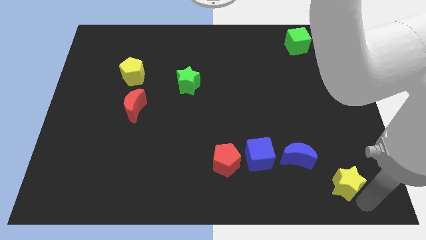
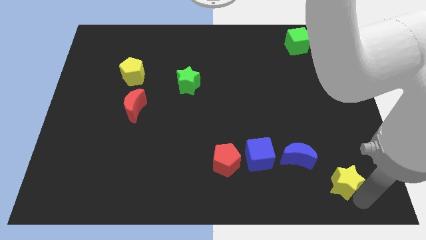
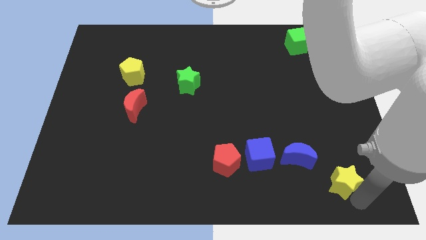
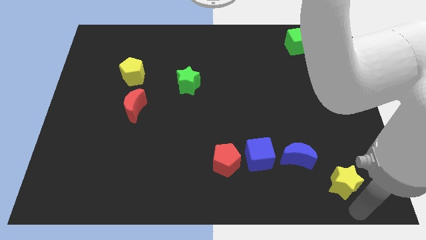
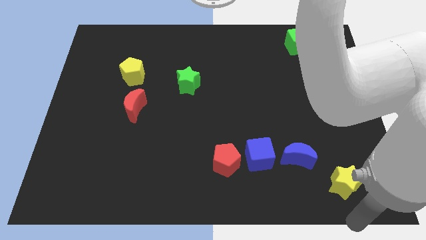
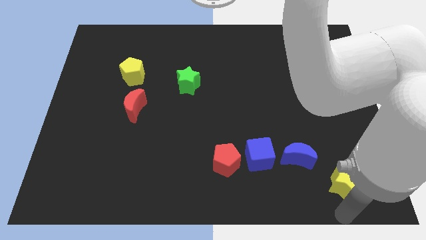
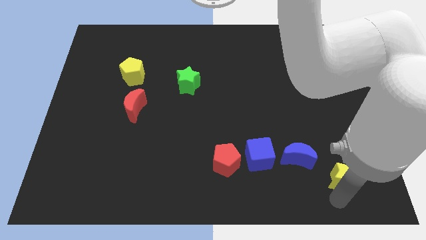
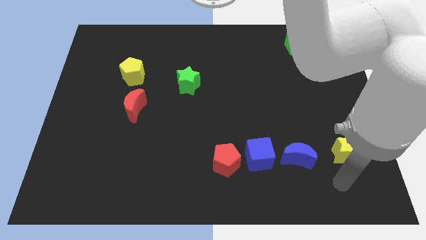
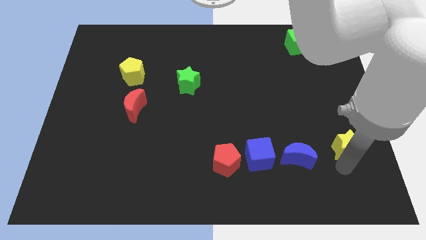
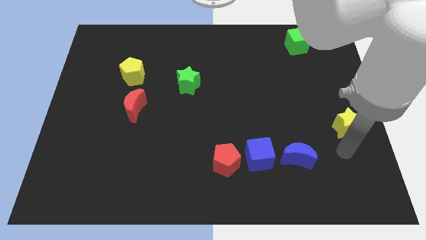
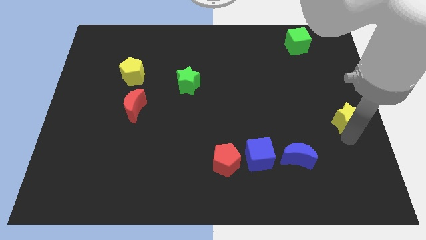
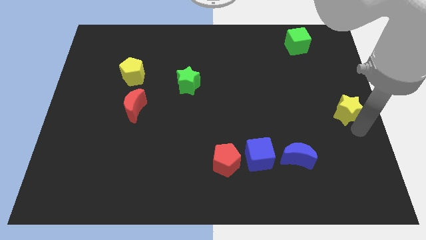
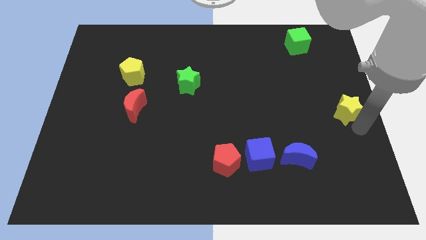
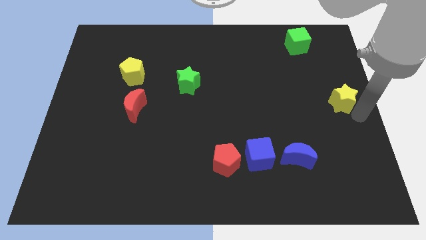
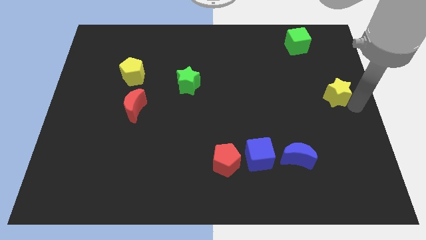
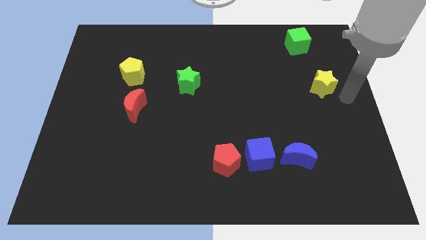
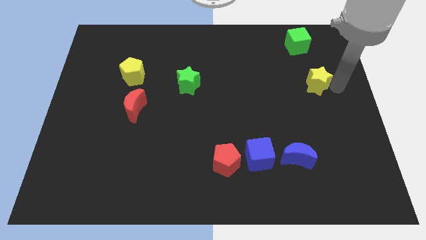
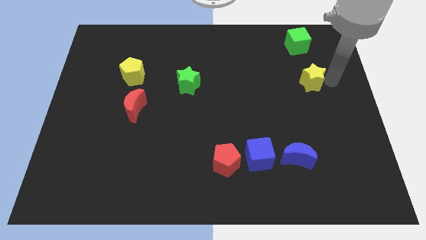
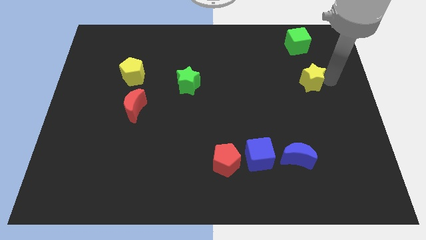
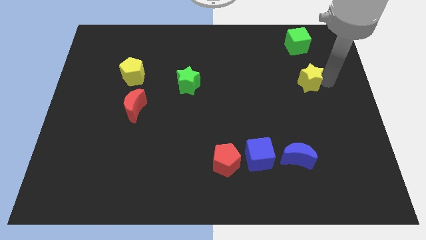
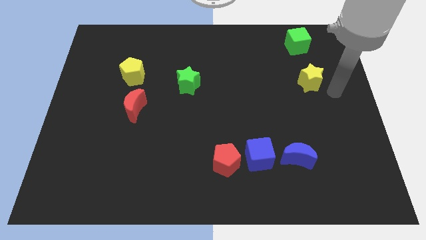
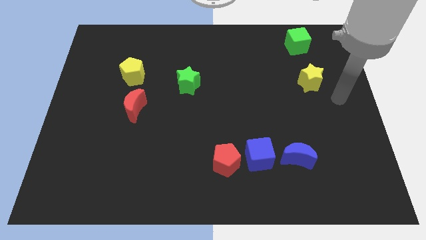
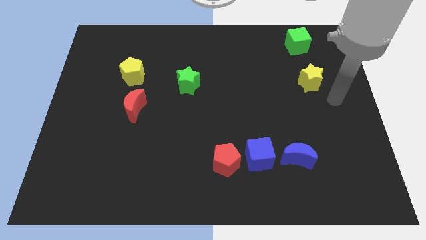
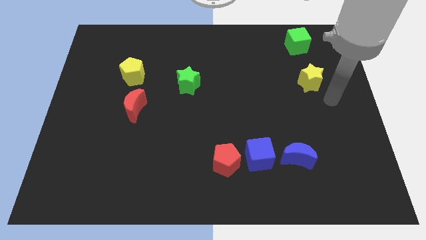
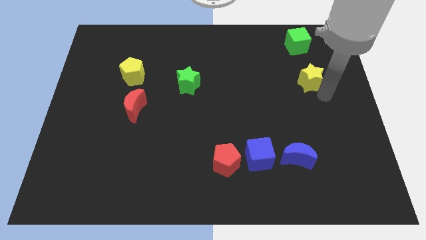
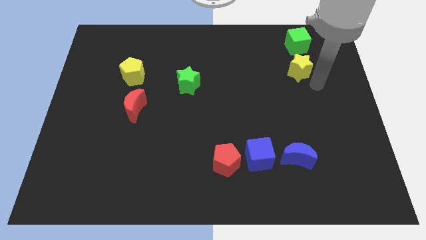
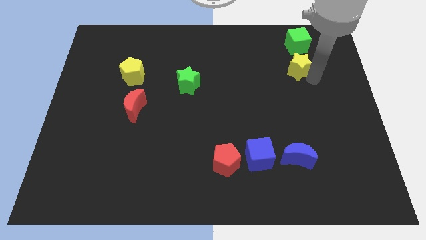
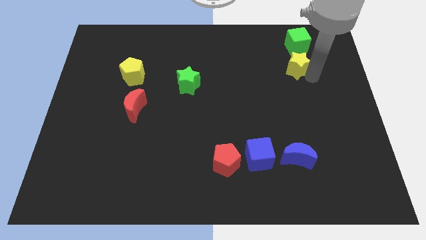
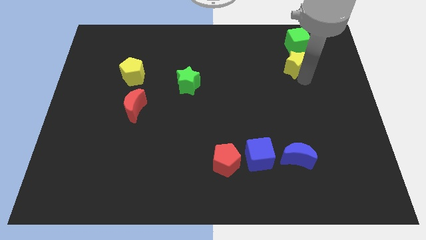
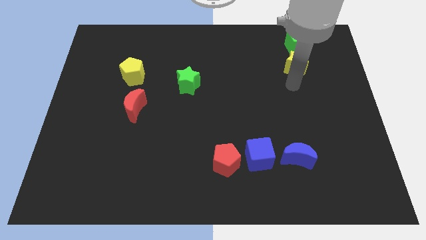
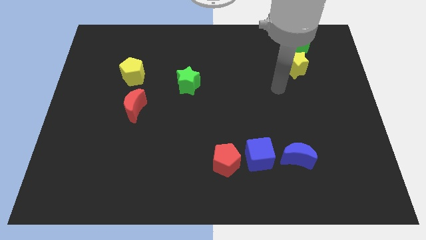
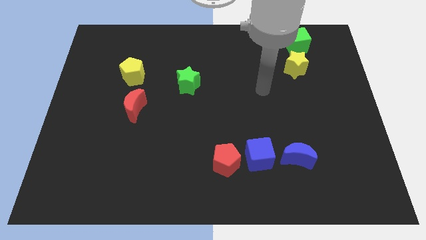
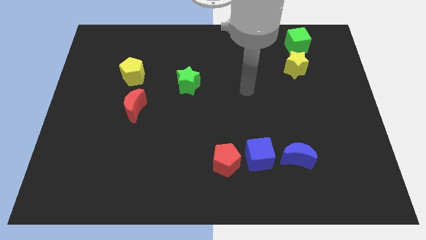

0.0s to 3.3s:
move the yellow star to the bottom side of the green cube

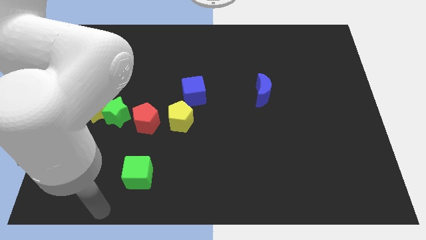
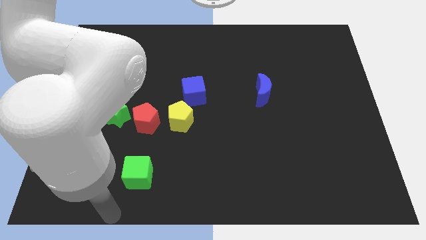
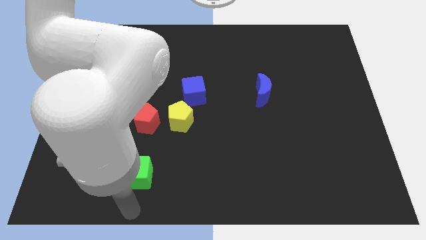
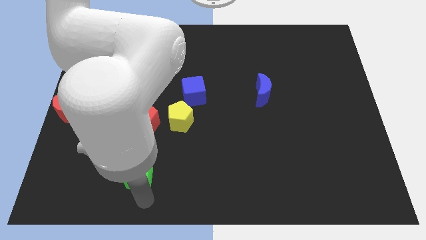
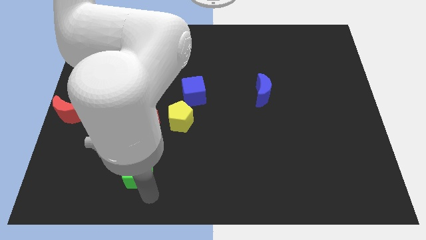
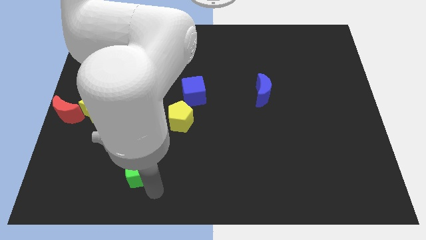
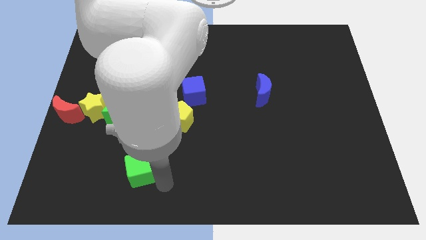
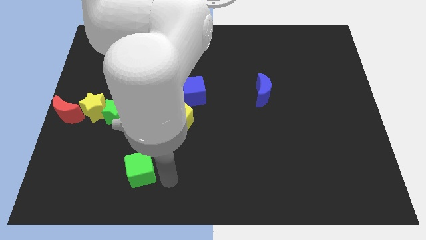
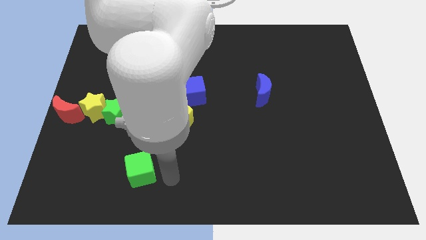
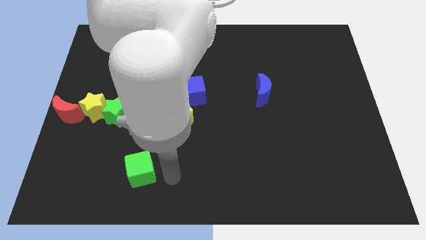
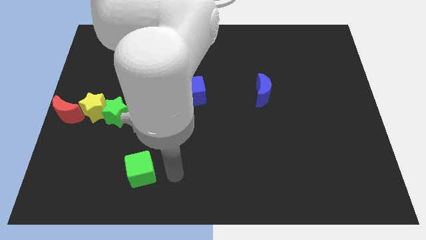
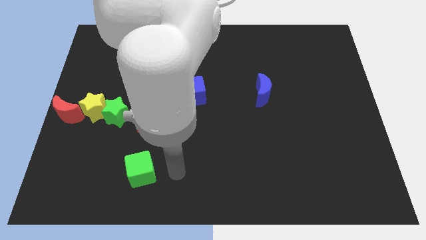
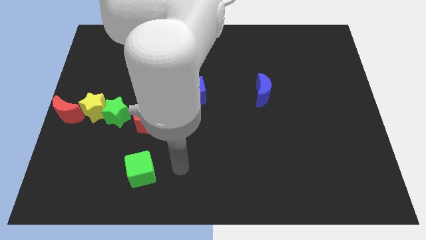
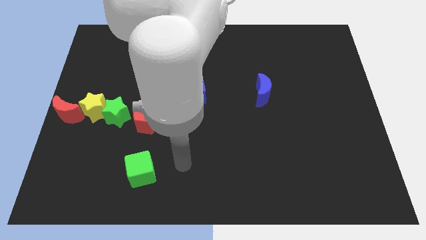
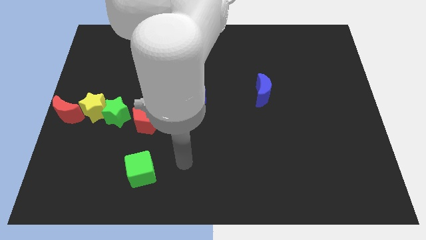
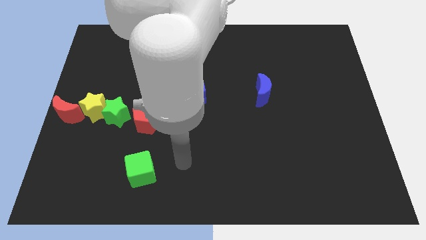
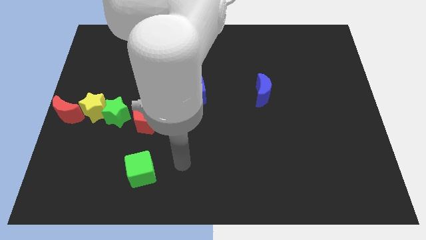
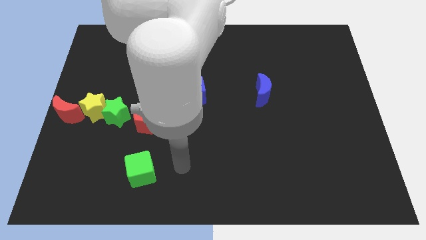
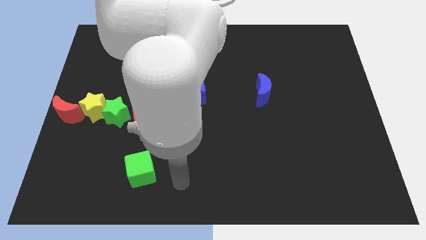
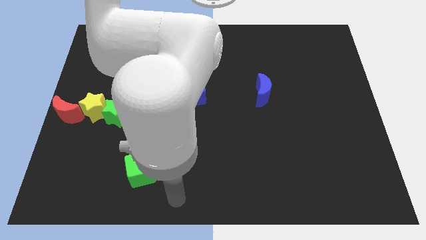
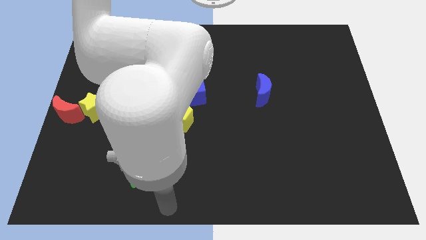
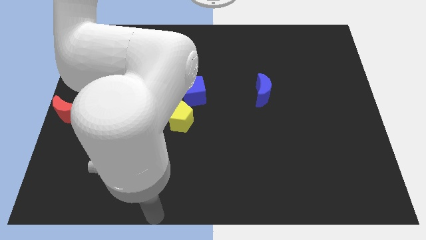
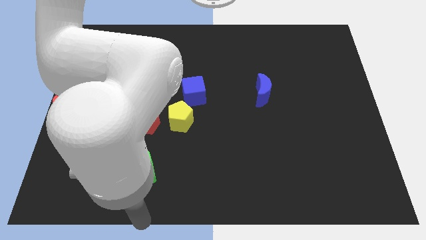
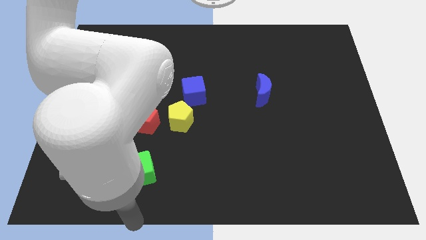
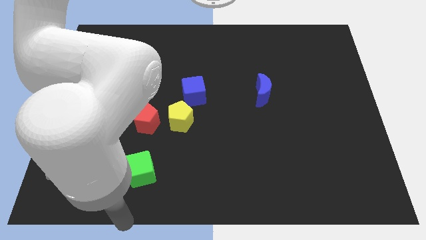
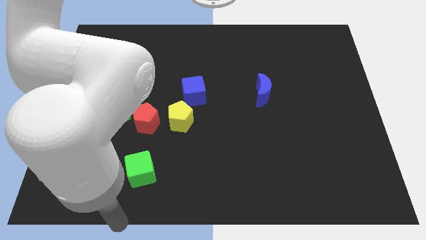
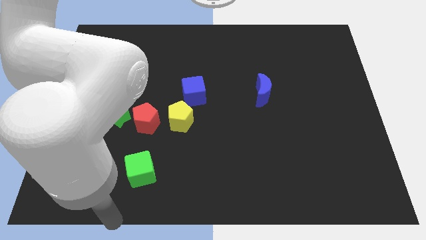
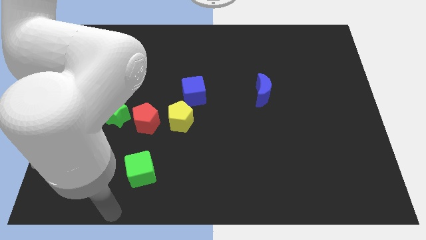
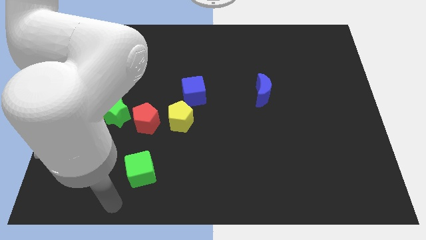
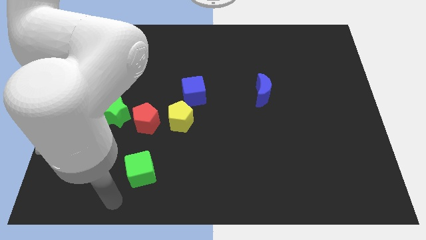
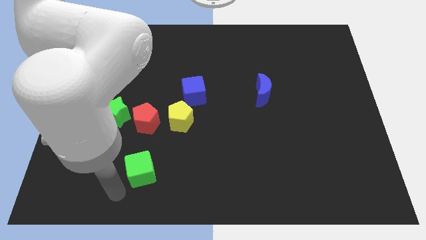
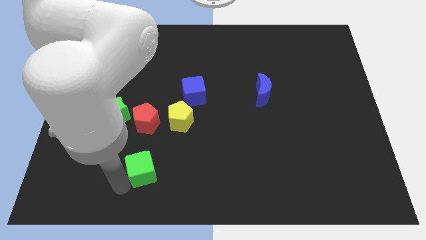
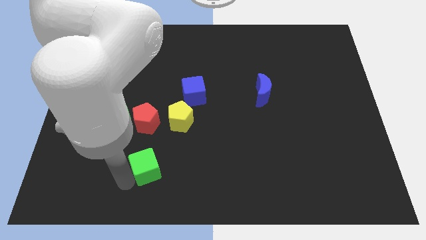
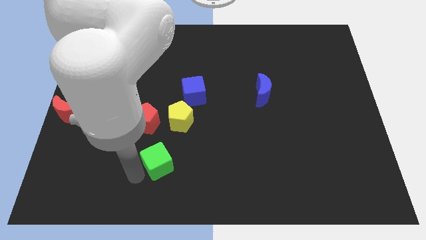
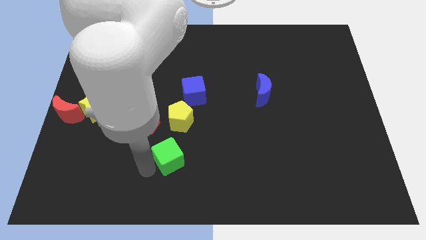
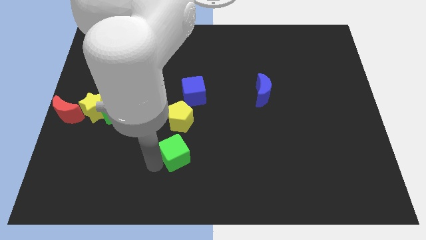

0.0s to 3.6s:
move the green cube vertically below to the yellow pentagon

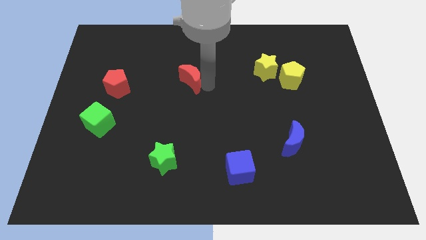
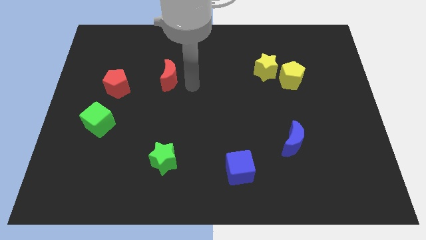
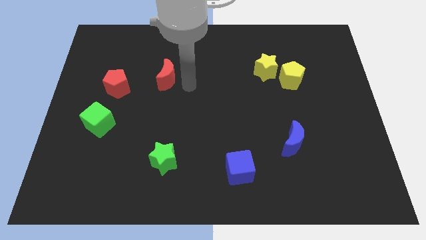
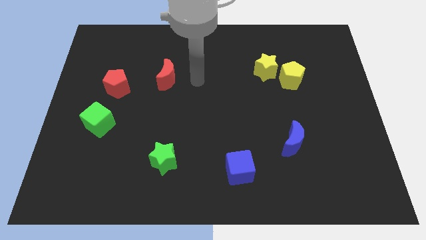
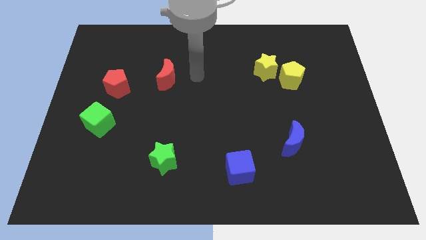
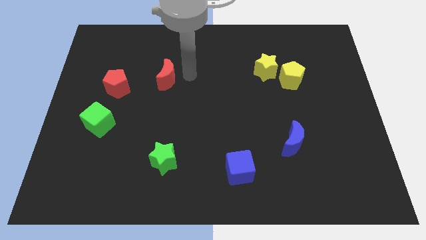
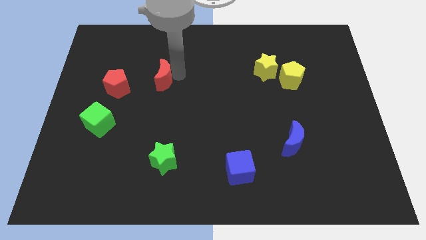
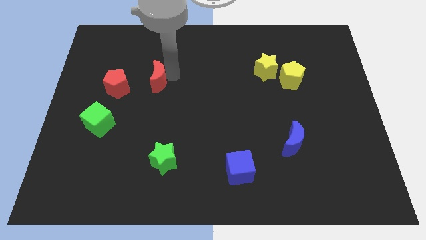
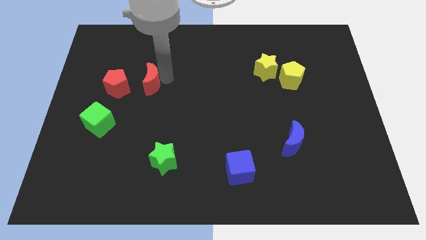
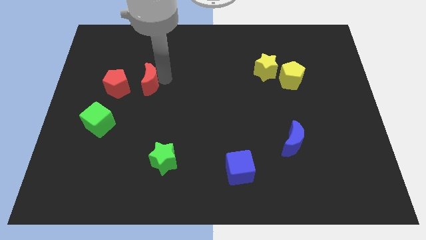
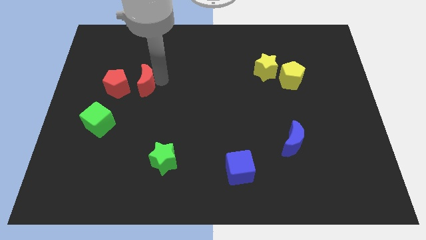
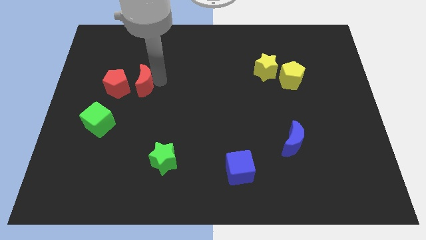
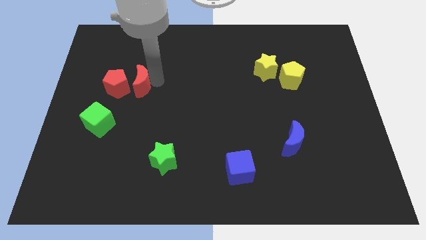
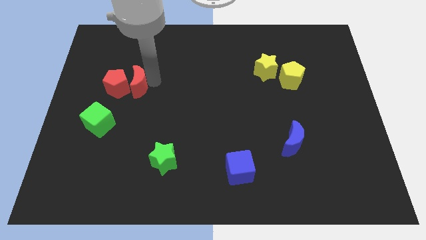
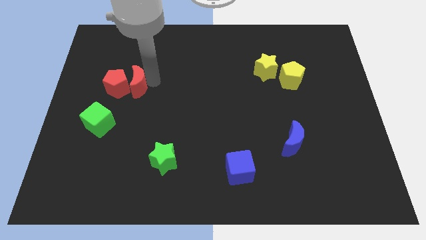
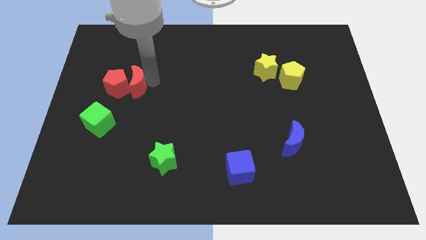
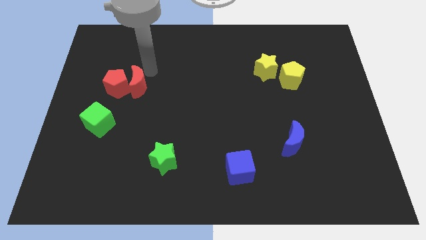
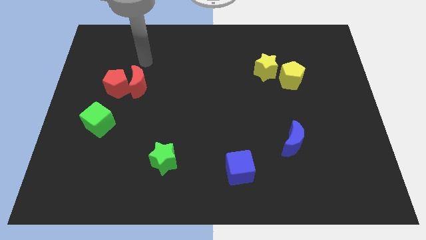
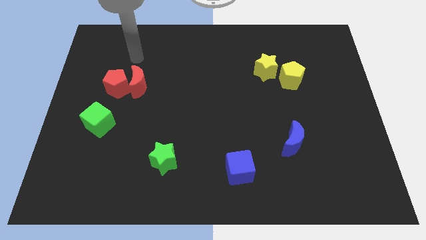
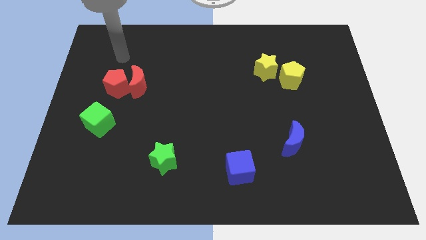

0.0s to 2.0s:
move the red crescent to the right of the red pentagon
